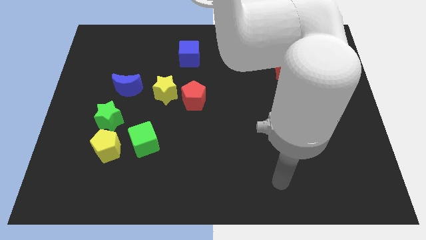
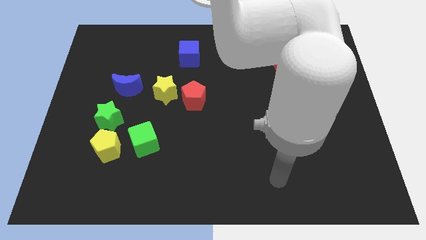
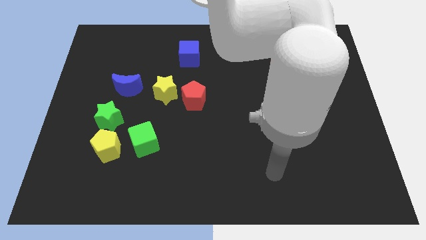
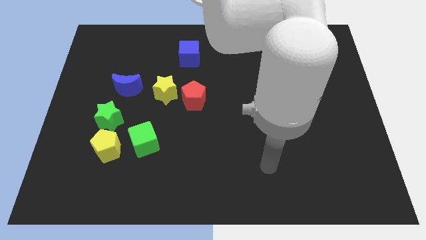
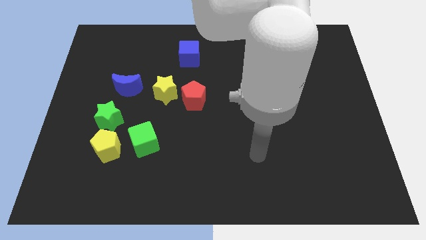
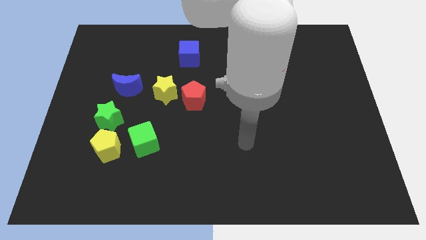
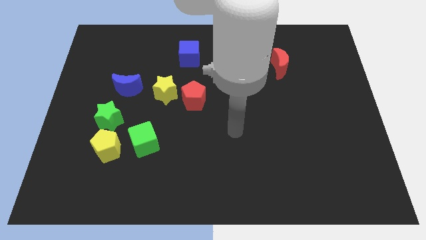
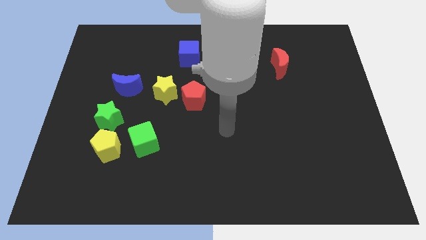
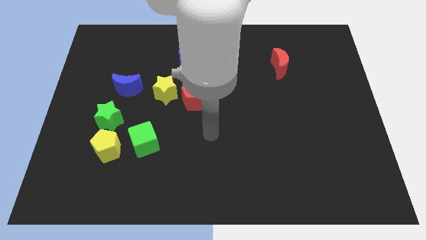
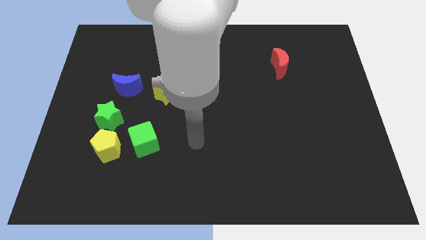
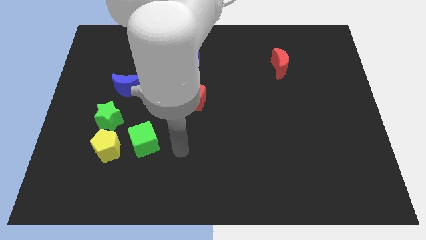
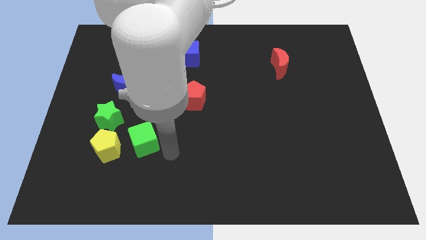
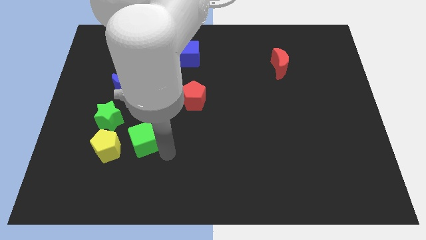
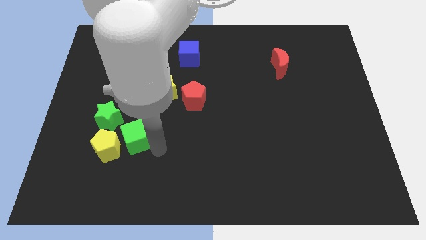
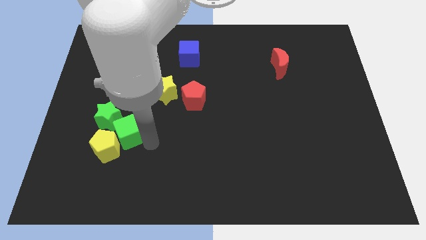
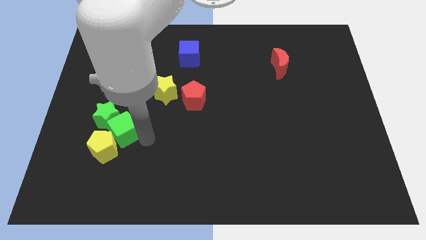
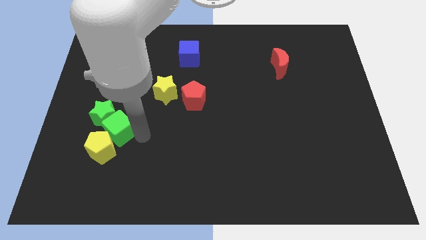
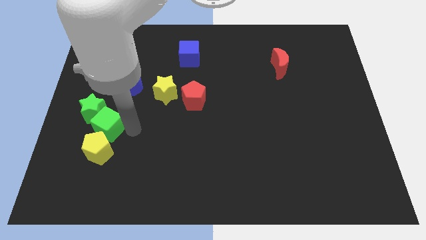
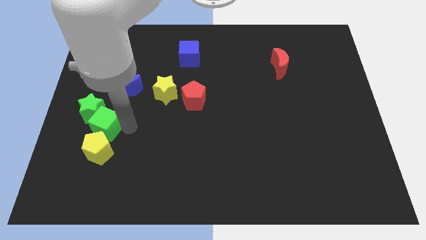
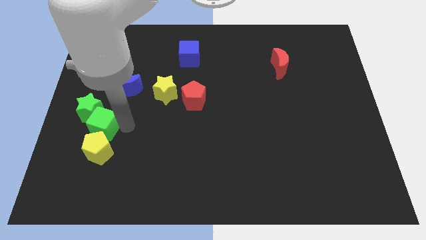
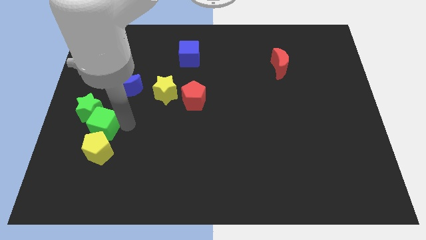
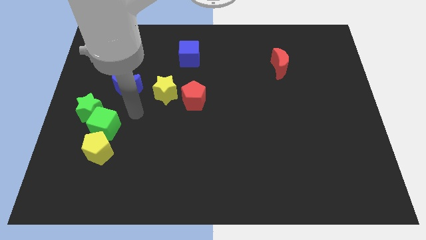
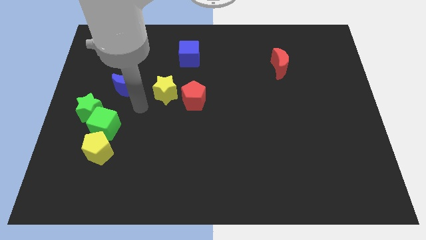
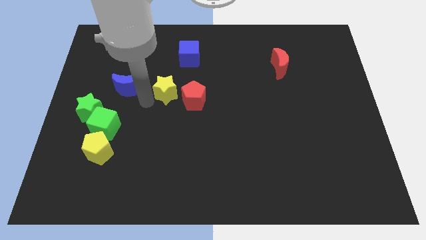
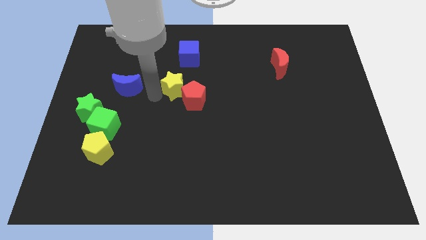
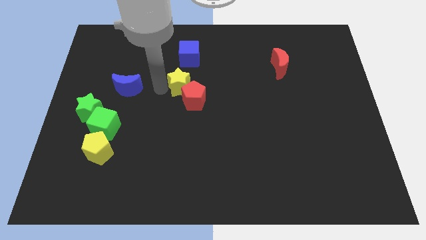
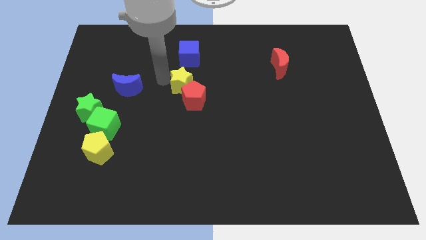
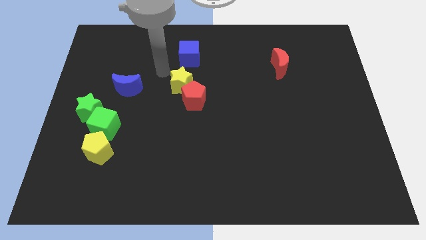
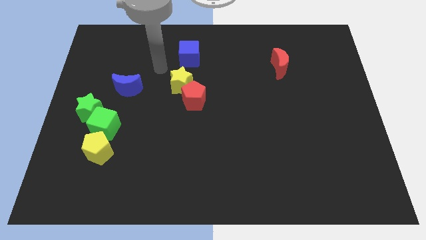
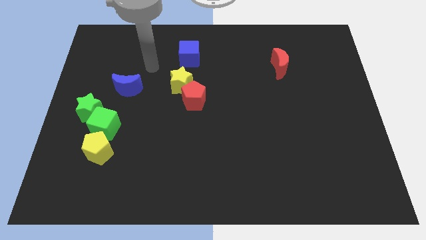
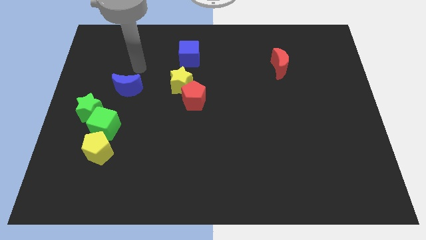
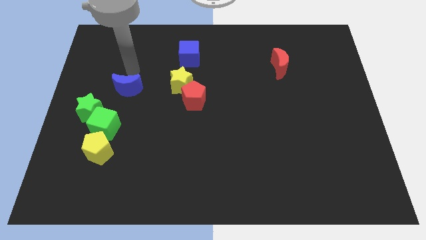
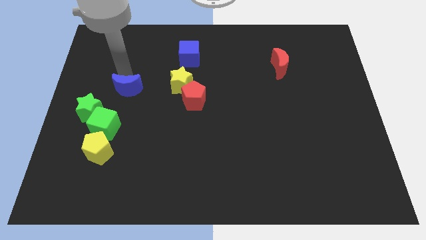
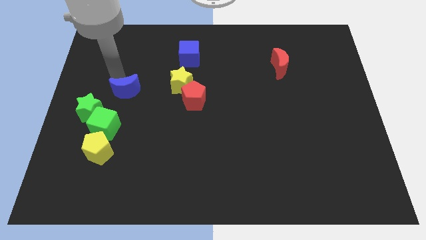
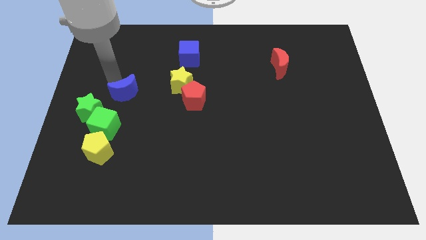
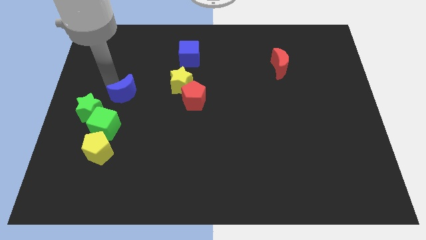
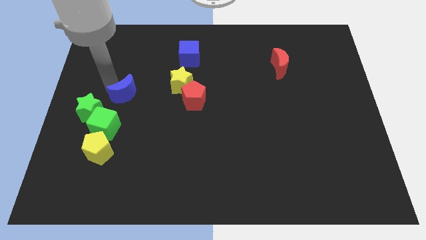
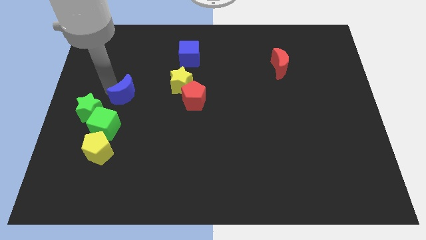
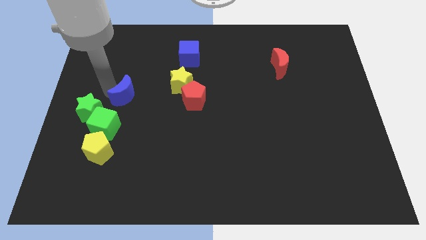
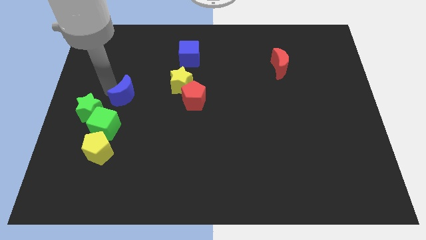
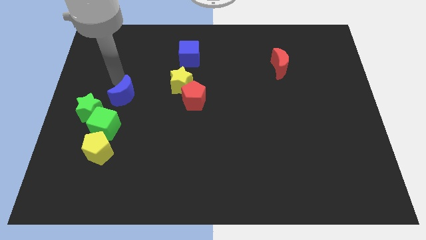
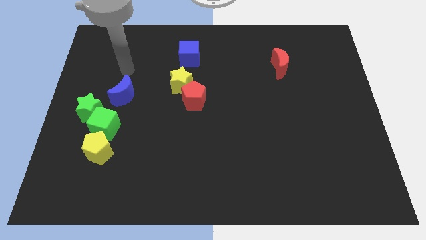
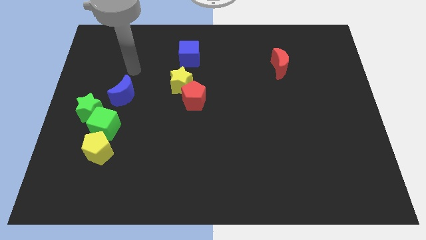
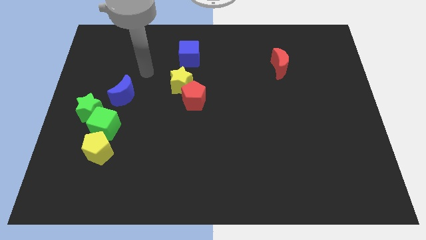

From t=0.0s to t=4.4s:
put the blue crescent to the top right side of the both green blocks

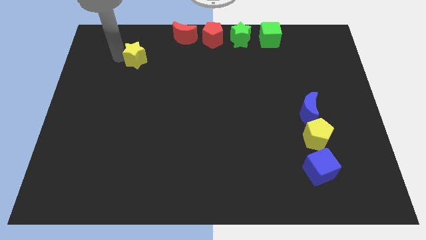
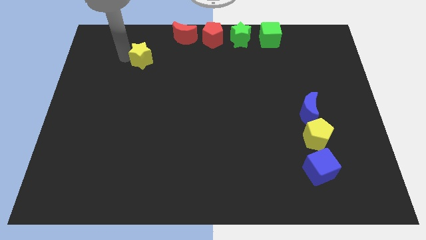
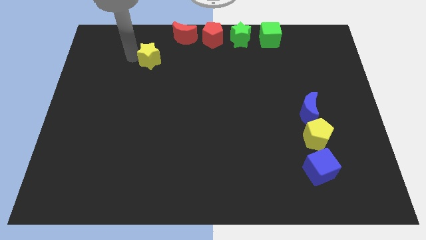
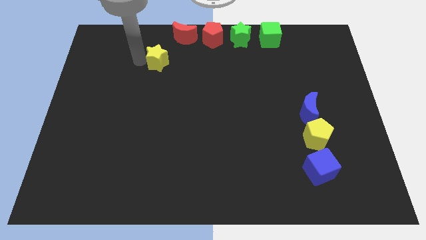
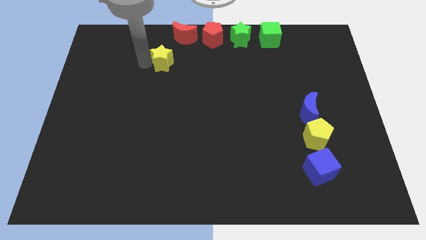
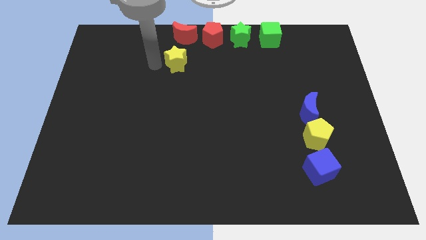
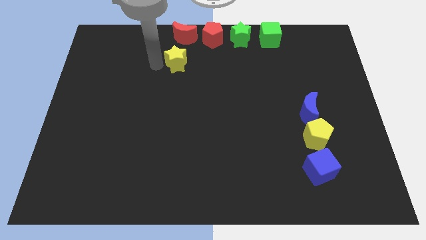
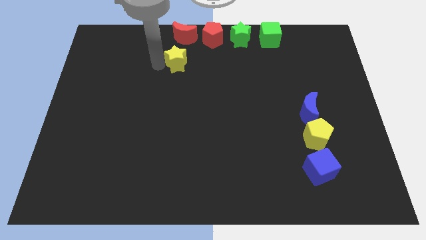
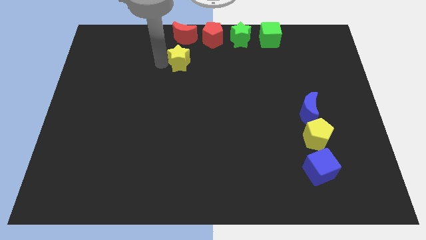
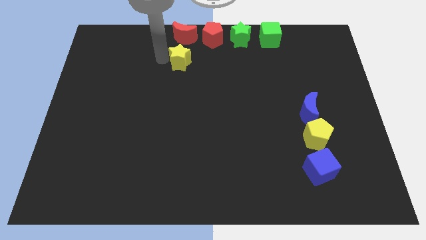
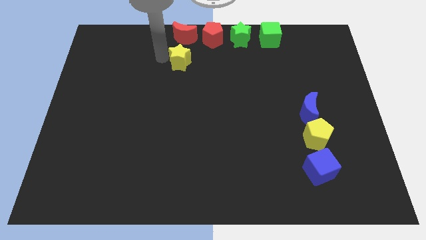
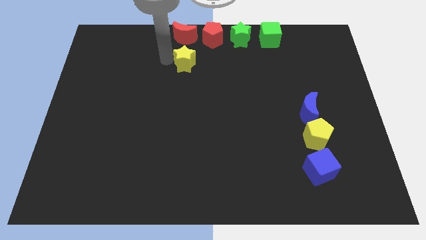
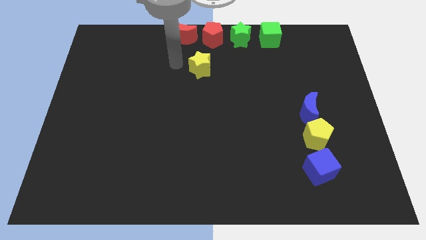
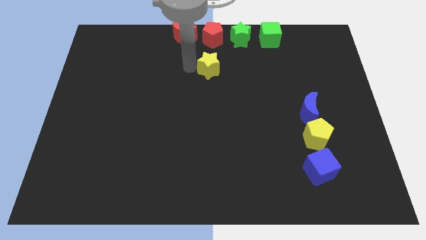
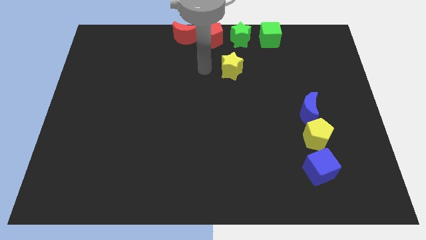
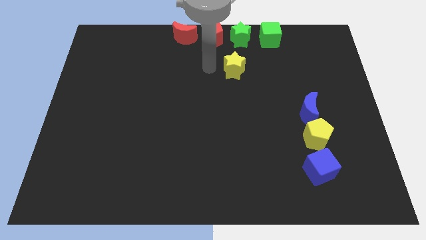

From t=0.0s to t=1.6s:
push the yellow star towards the center of the board

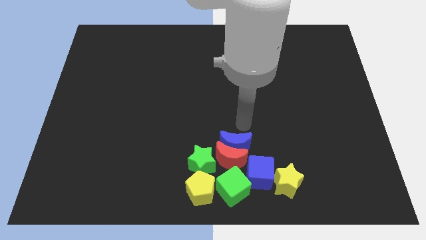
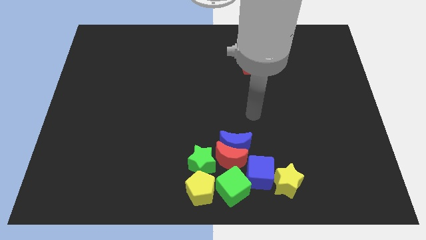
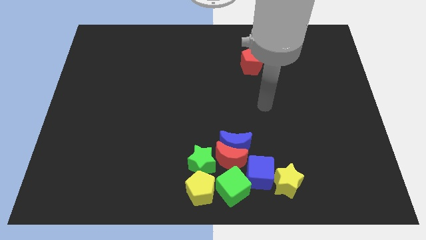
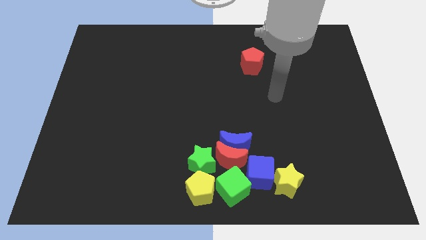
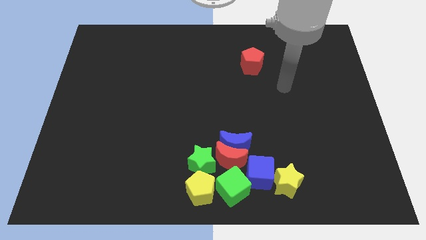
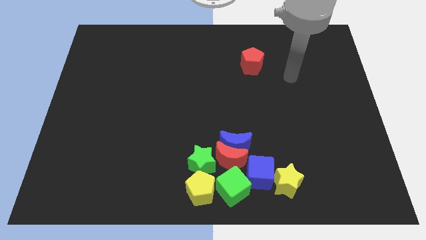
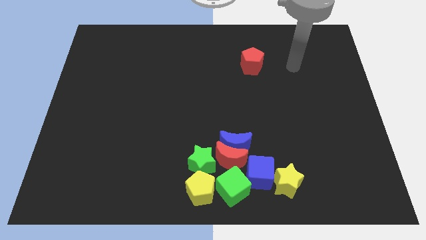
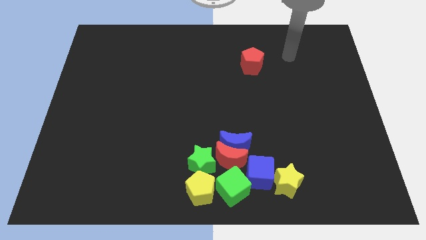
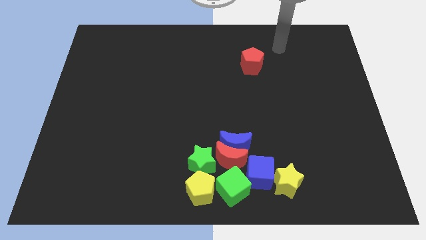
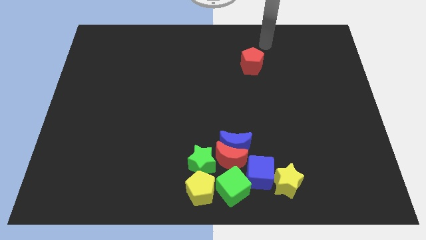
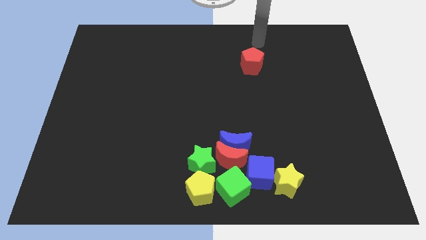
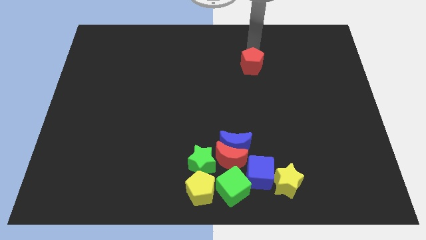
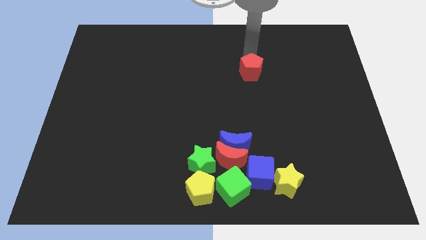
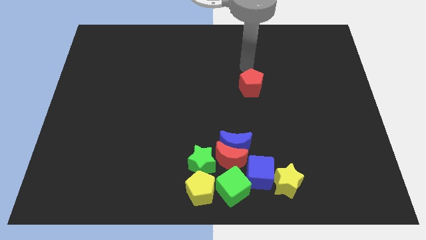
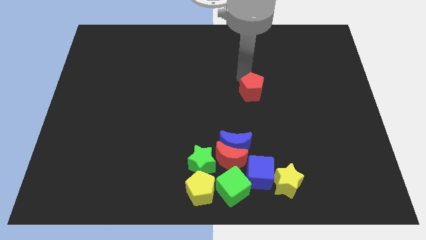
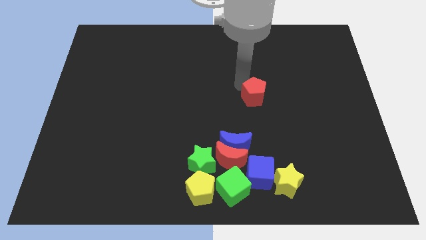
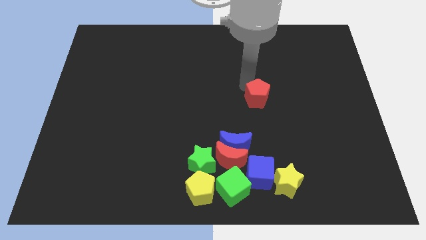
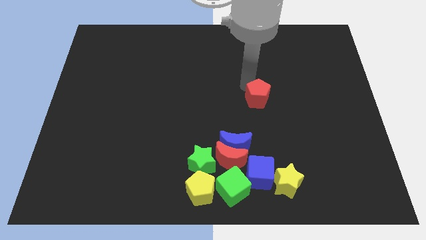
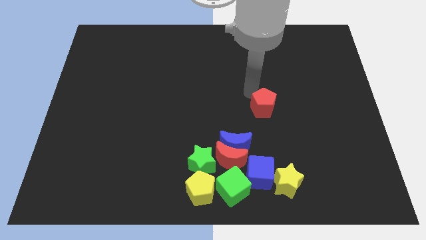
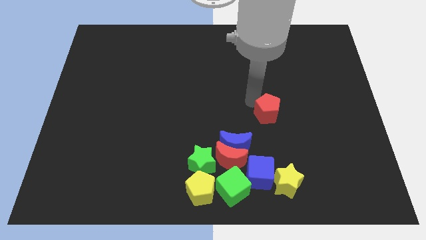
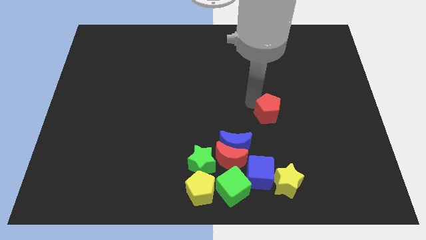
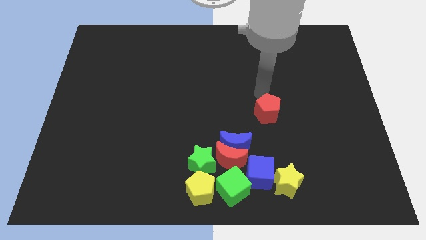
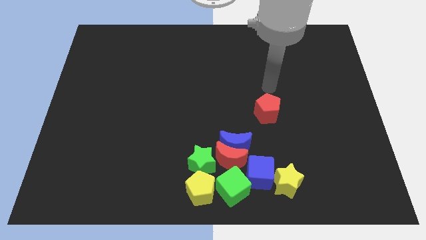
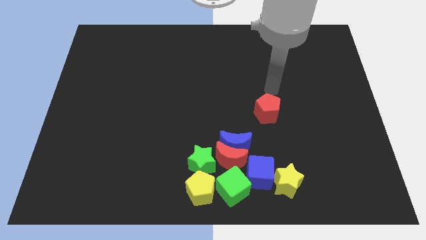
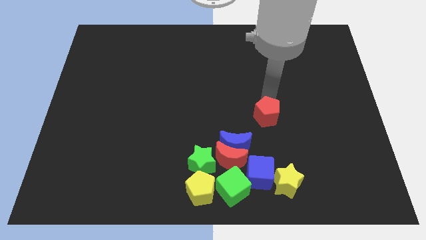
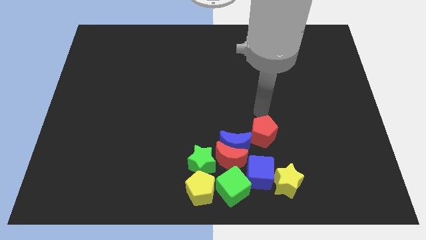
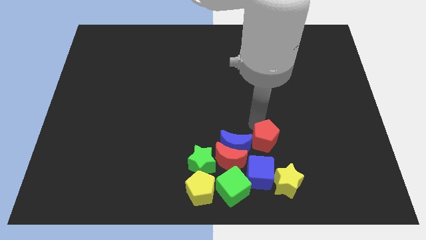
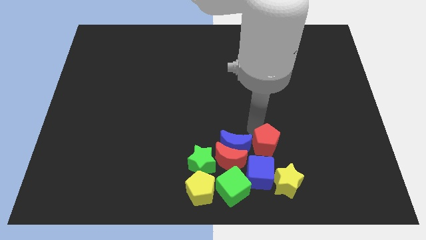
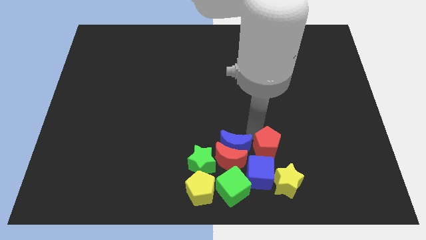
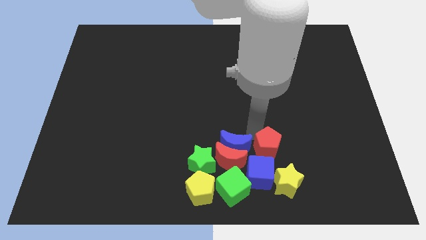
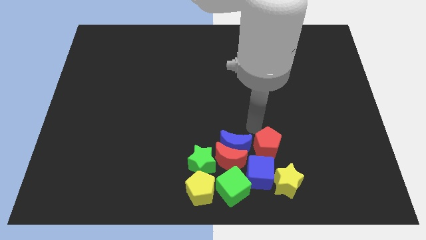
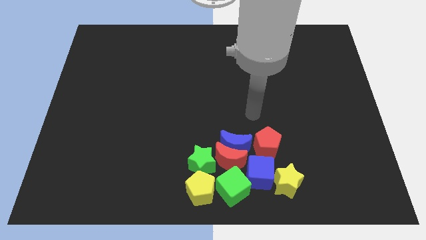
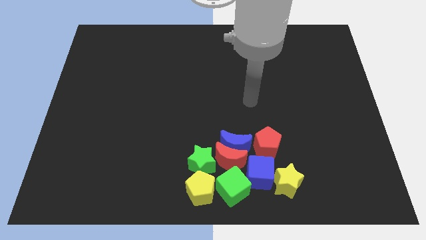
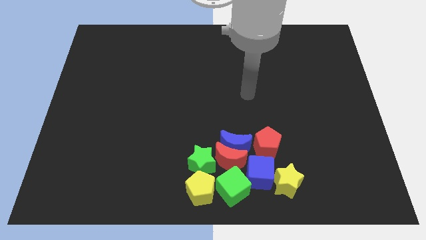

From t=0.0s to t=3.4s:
move red pentagon above the blue cube
